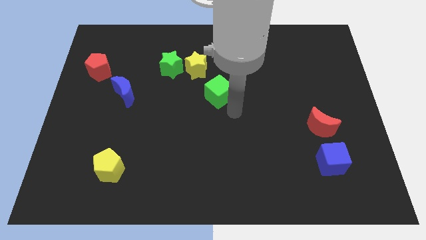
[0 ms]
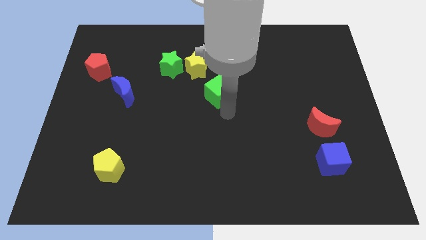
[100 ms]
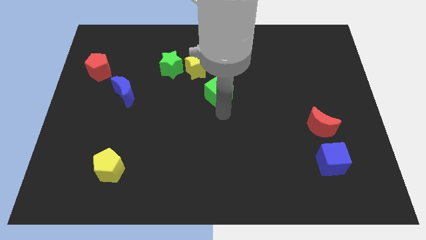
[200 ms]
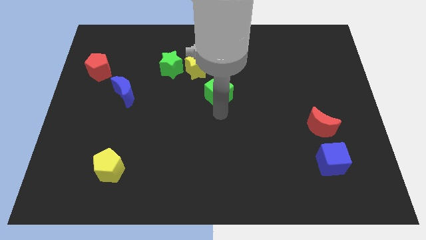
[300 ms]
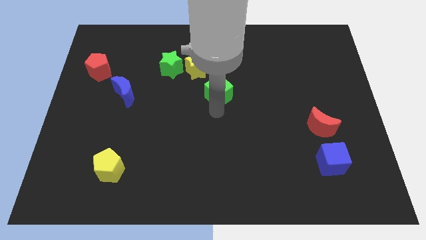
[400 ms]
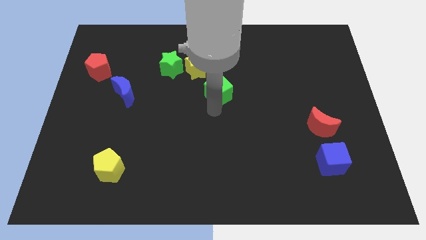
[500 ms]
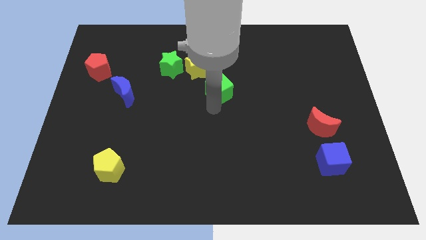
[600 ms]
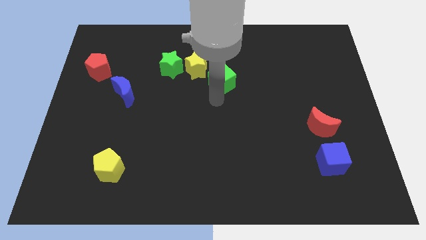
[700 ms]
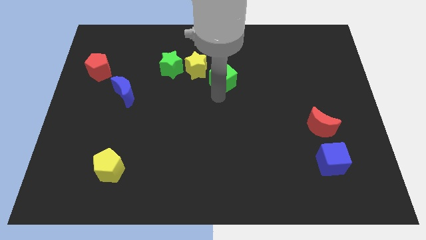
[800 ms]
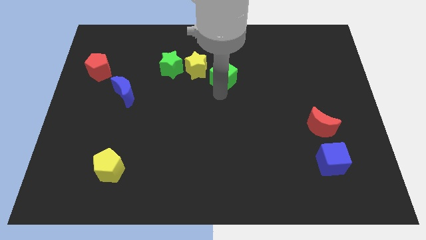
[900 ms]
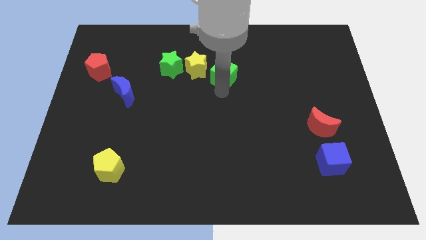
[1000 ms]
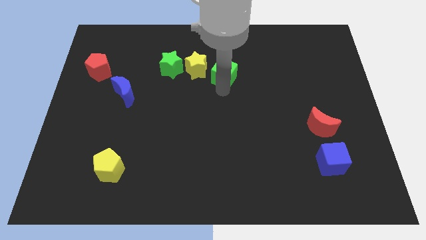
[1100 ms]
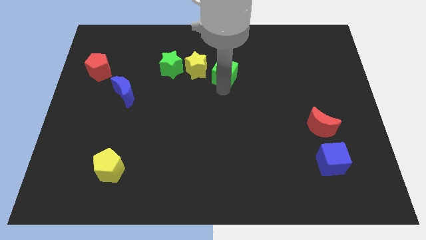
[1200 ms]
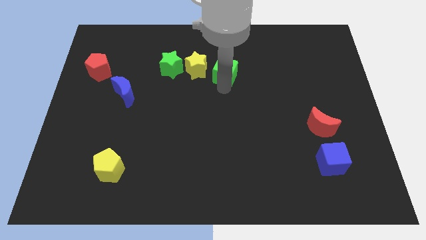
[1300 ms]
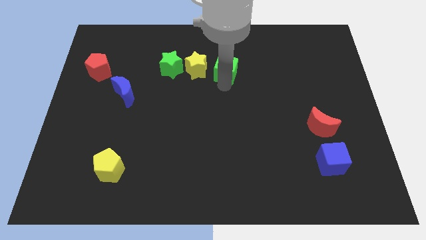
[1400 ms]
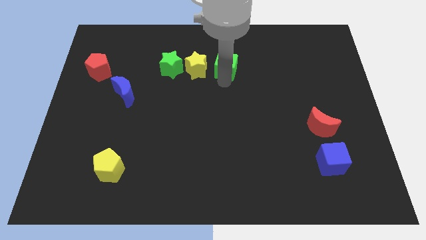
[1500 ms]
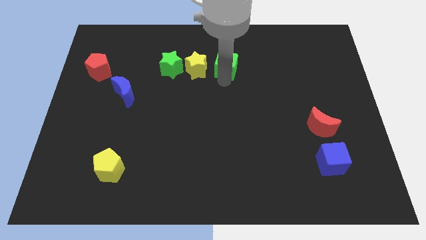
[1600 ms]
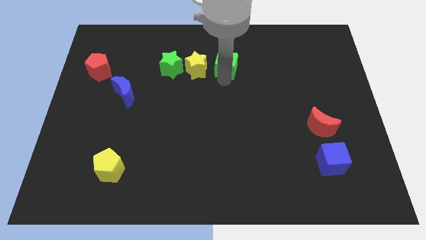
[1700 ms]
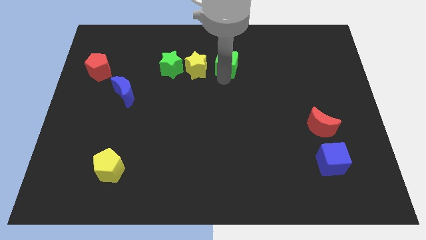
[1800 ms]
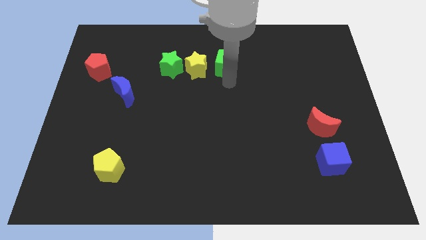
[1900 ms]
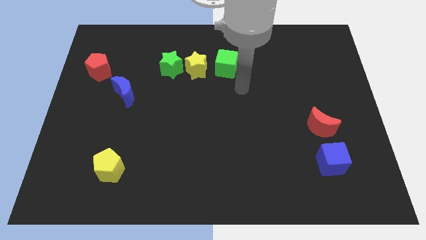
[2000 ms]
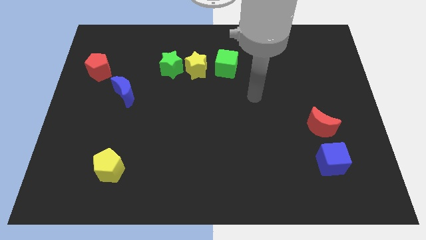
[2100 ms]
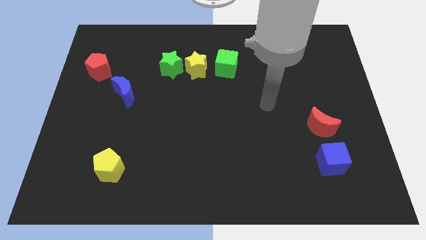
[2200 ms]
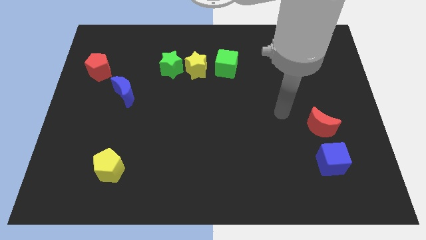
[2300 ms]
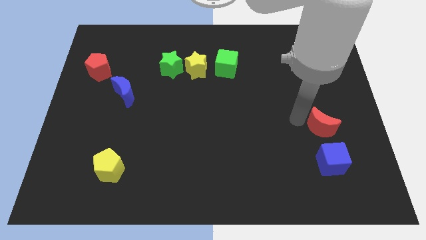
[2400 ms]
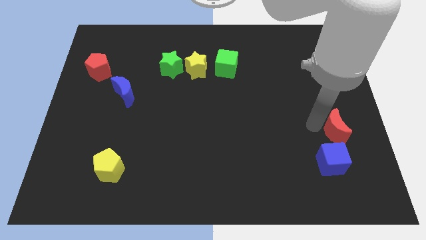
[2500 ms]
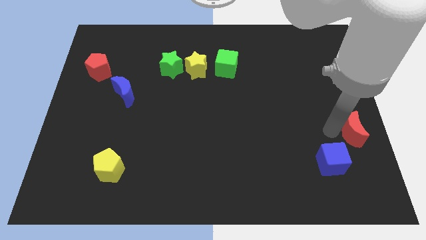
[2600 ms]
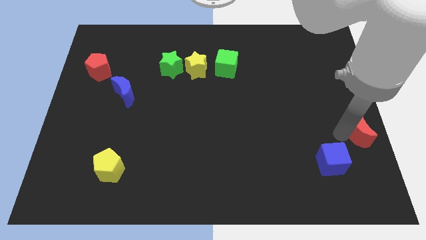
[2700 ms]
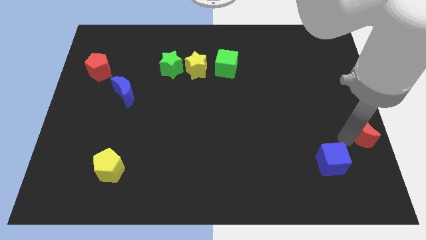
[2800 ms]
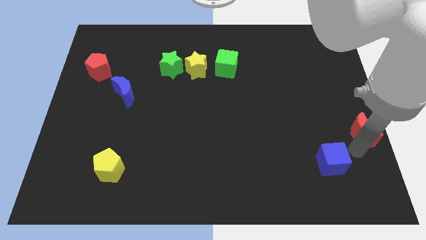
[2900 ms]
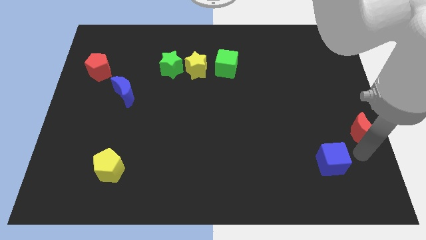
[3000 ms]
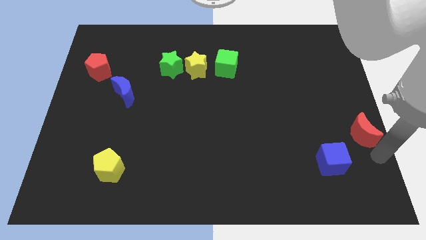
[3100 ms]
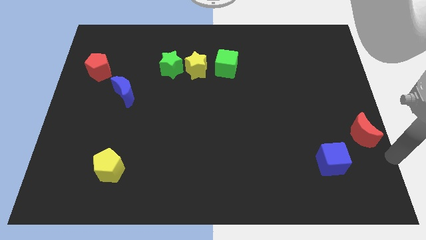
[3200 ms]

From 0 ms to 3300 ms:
place the green cube right to the yellow star to form a horizontal line

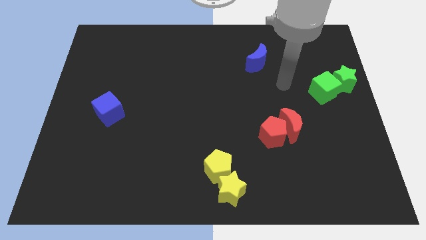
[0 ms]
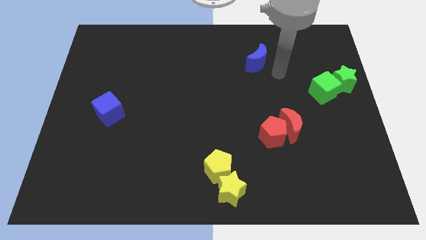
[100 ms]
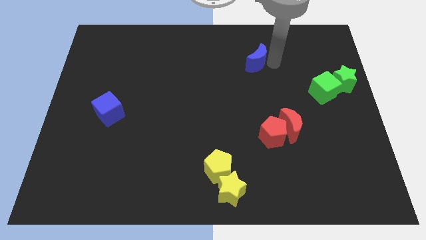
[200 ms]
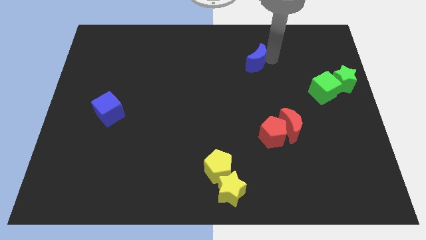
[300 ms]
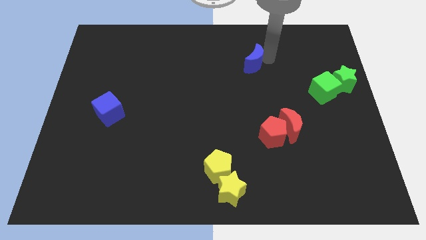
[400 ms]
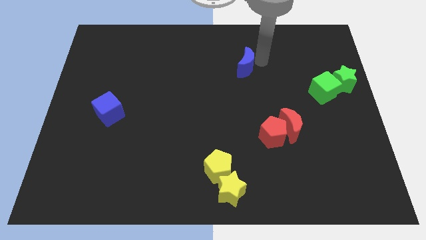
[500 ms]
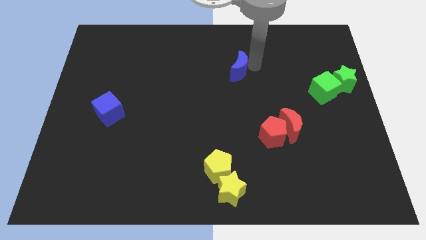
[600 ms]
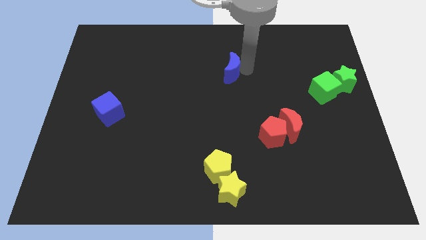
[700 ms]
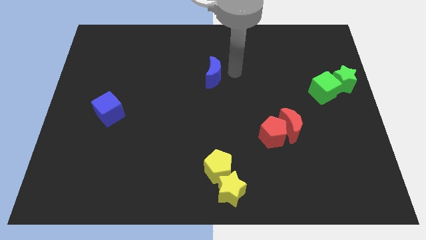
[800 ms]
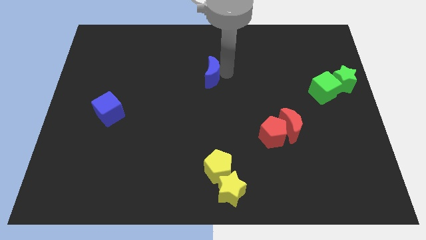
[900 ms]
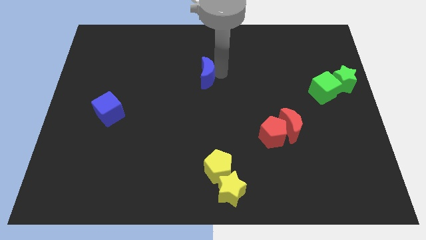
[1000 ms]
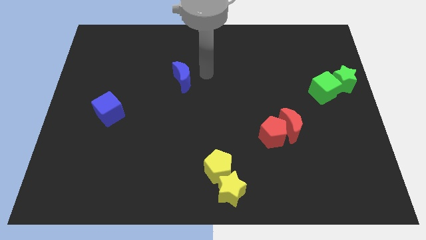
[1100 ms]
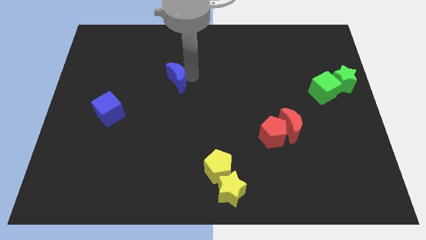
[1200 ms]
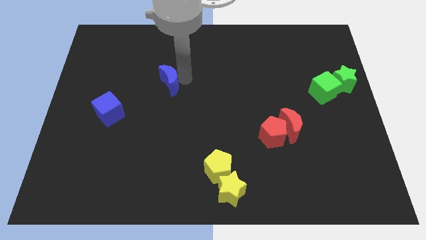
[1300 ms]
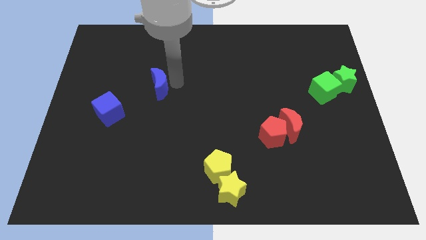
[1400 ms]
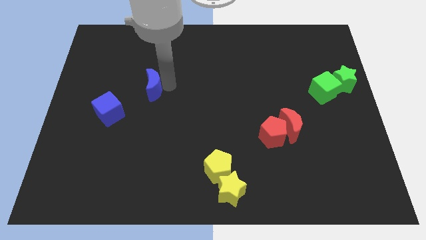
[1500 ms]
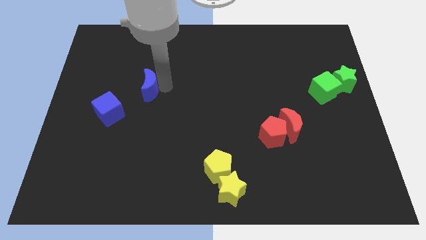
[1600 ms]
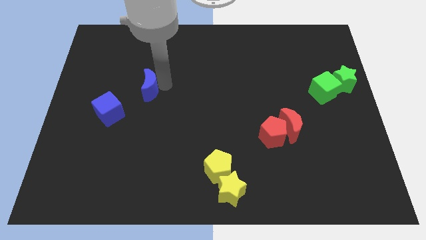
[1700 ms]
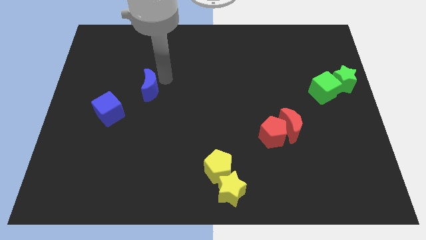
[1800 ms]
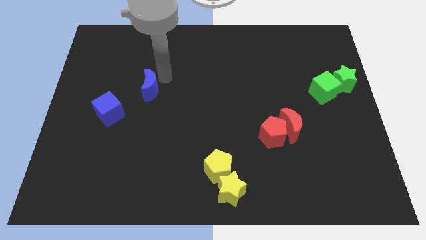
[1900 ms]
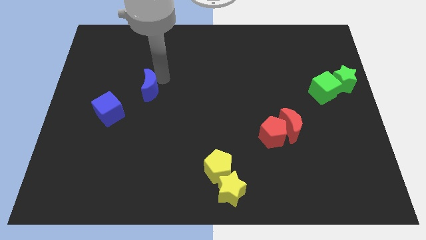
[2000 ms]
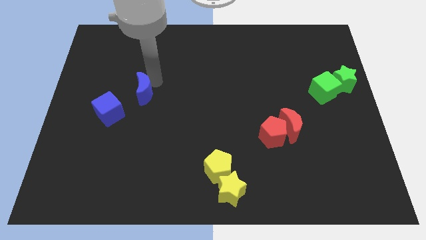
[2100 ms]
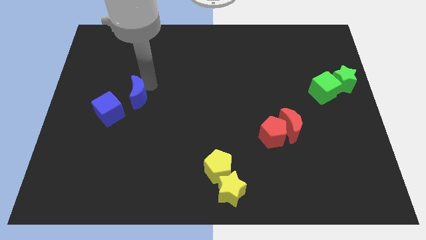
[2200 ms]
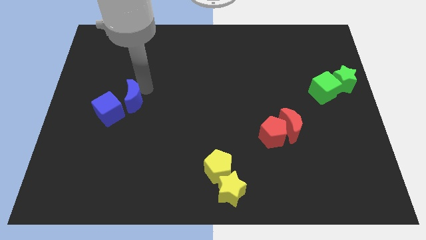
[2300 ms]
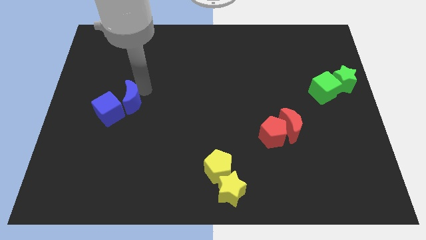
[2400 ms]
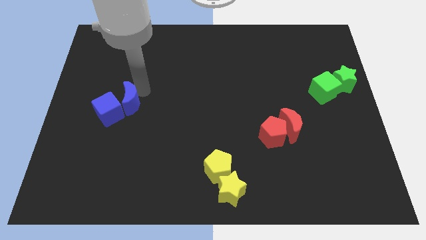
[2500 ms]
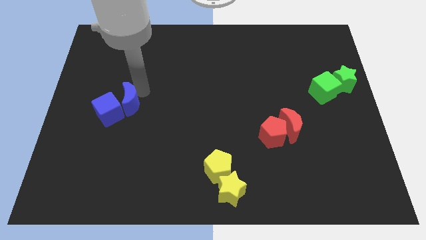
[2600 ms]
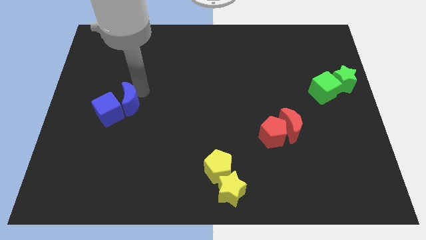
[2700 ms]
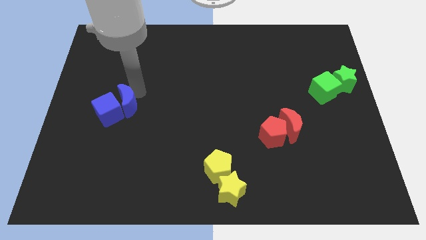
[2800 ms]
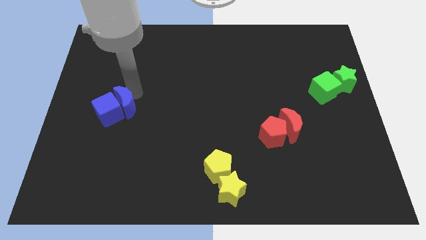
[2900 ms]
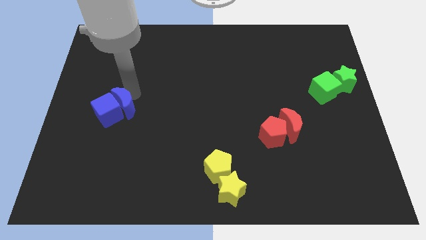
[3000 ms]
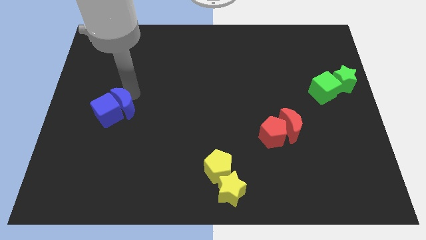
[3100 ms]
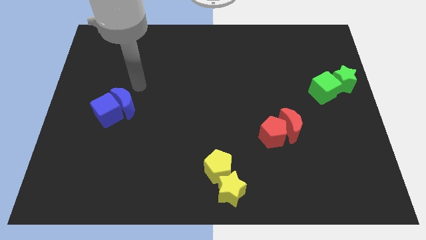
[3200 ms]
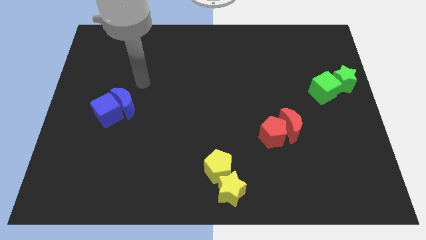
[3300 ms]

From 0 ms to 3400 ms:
place the blue moon diagonally top left to the yellow blocks

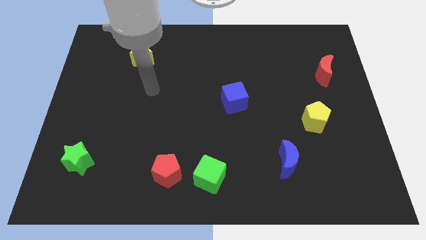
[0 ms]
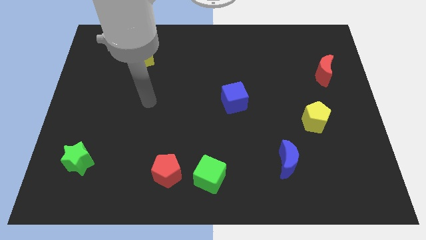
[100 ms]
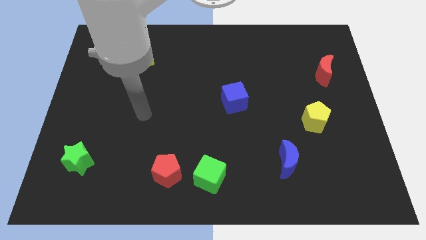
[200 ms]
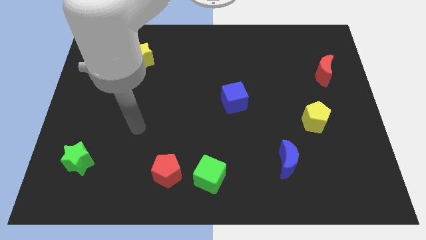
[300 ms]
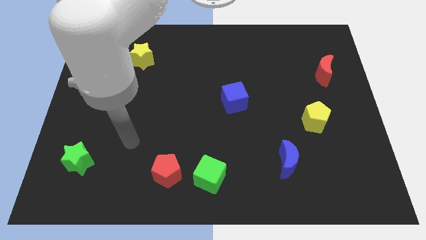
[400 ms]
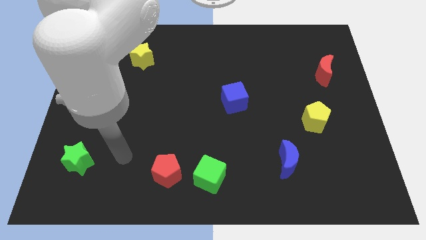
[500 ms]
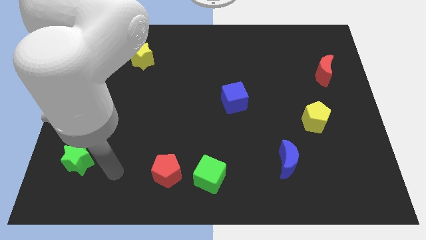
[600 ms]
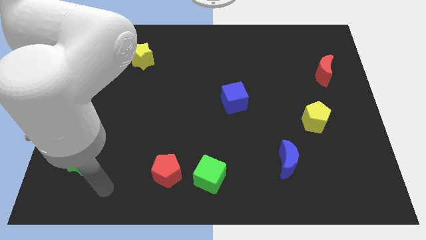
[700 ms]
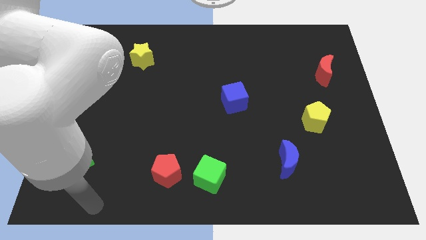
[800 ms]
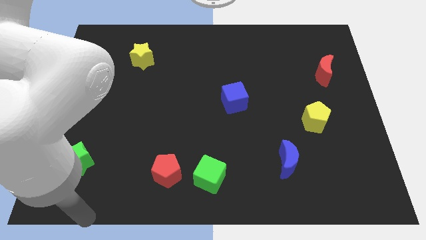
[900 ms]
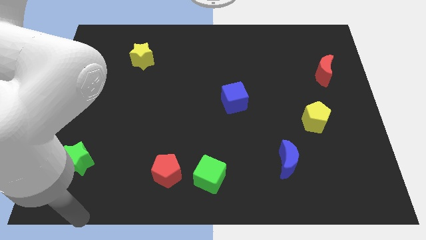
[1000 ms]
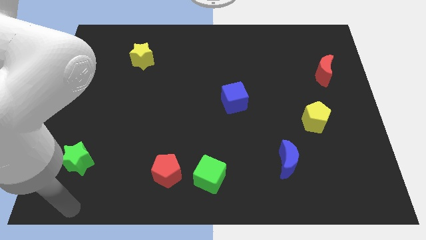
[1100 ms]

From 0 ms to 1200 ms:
point below the green star

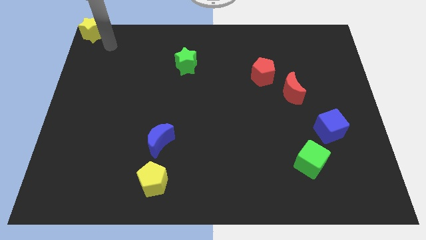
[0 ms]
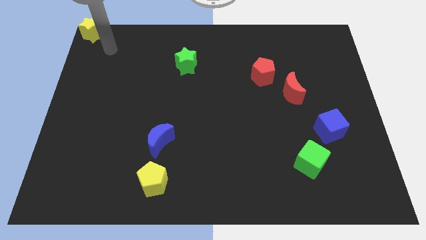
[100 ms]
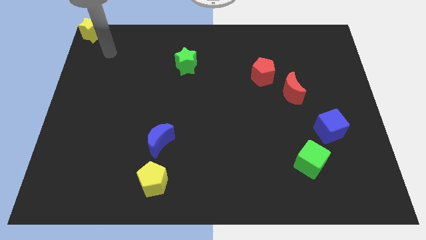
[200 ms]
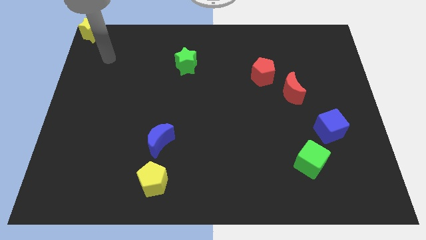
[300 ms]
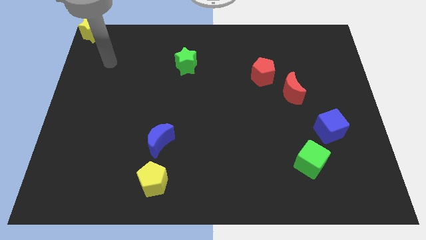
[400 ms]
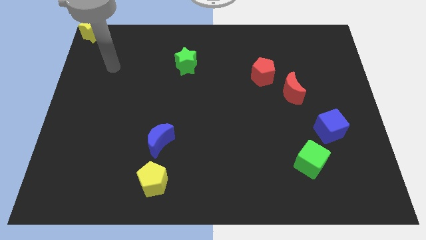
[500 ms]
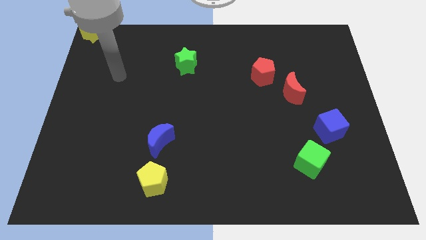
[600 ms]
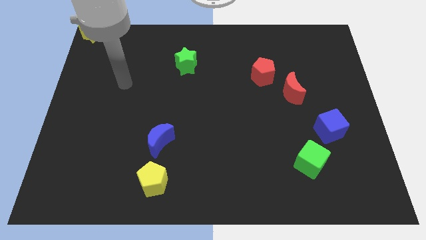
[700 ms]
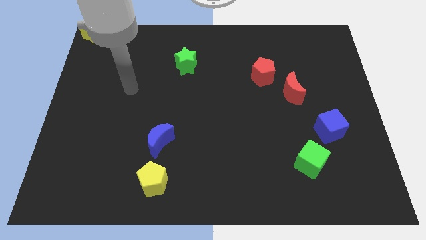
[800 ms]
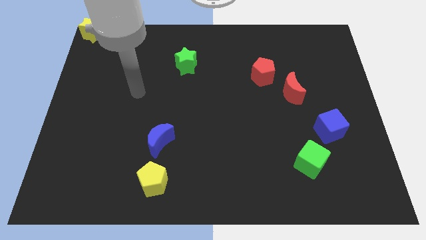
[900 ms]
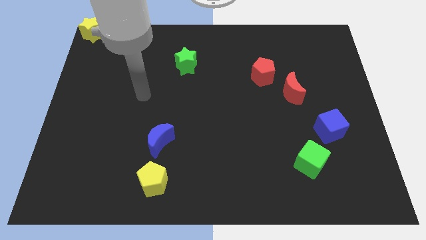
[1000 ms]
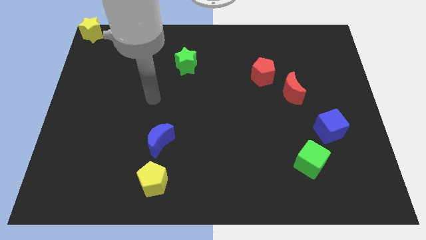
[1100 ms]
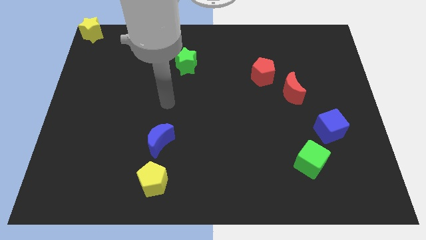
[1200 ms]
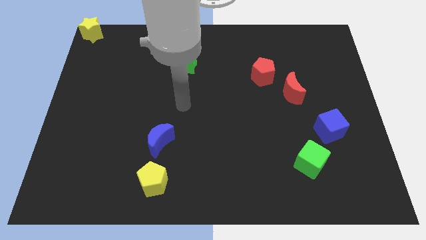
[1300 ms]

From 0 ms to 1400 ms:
place your hand above the blue crescent
